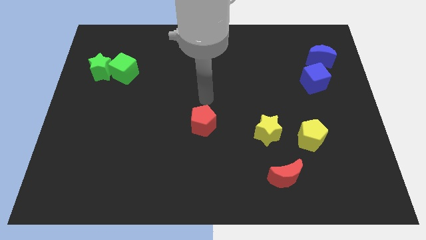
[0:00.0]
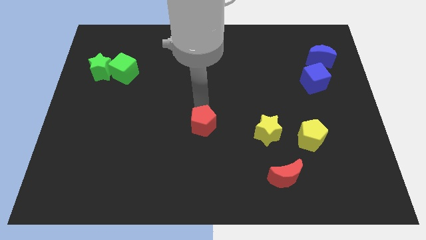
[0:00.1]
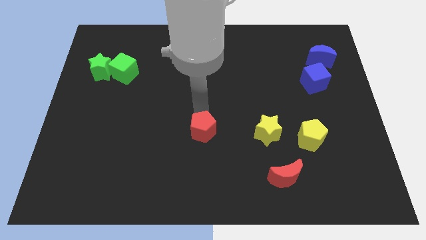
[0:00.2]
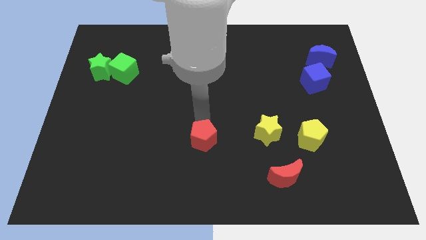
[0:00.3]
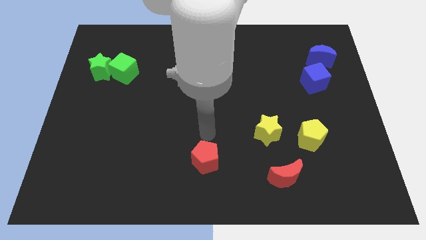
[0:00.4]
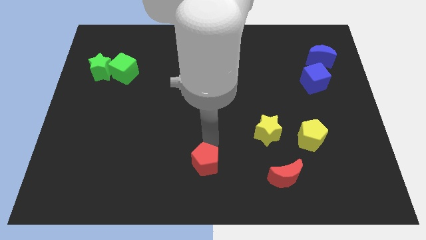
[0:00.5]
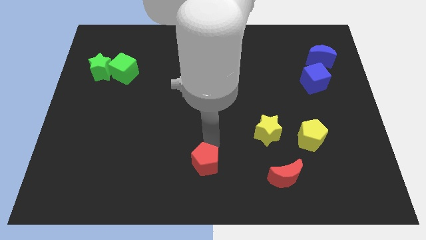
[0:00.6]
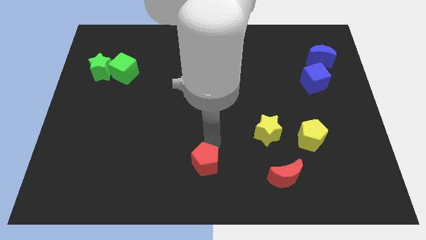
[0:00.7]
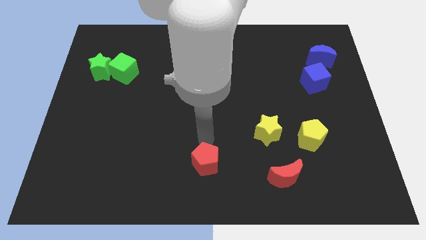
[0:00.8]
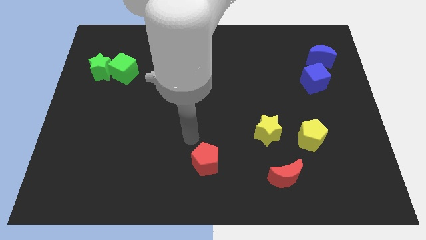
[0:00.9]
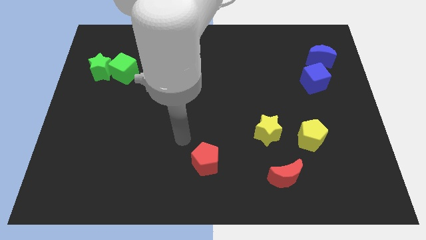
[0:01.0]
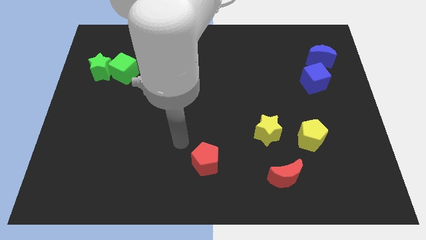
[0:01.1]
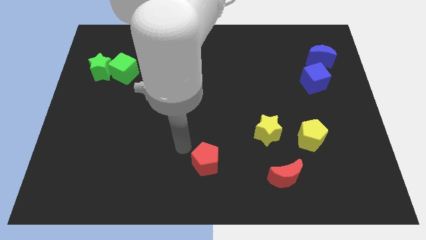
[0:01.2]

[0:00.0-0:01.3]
slide the red pentagon left to the red moon

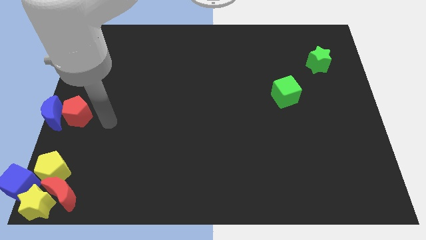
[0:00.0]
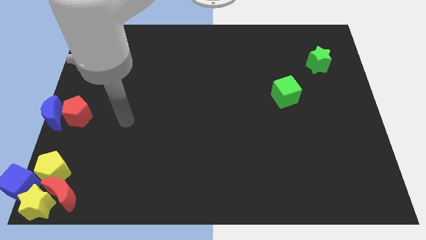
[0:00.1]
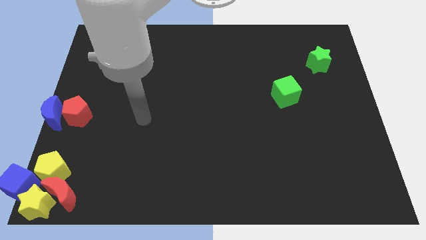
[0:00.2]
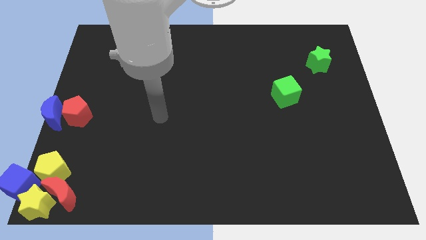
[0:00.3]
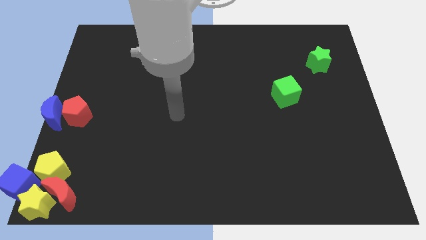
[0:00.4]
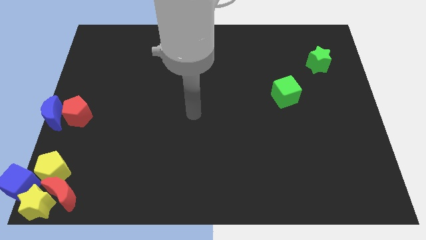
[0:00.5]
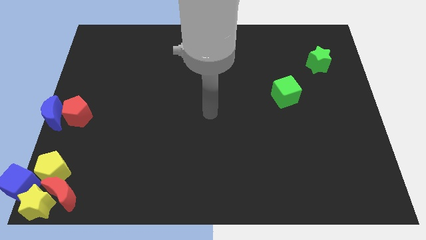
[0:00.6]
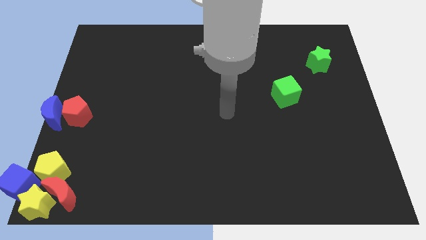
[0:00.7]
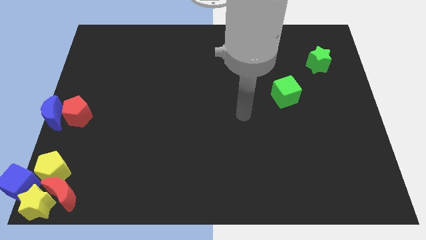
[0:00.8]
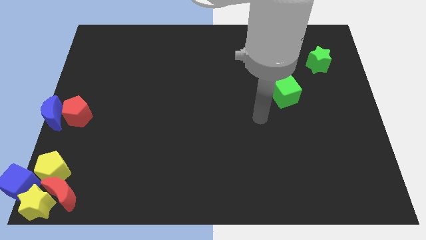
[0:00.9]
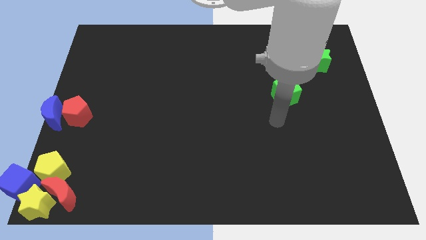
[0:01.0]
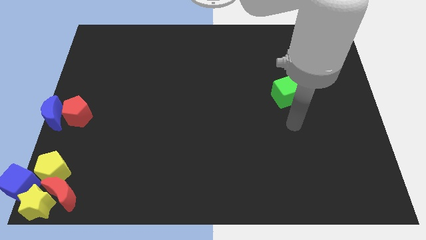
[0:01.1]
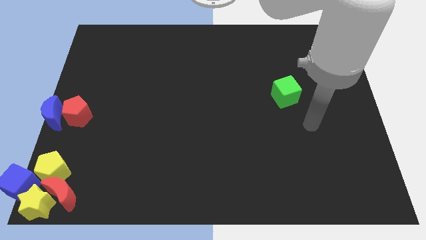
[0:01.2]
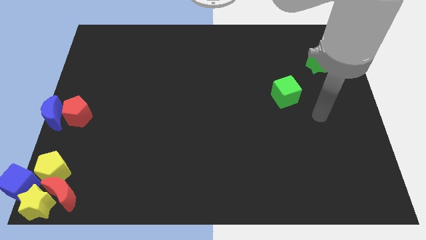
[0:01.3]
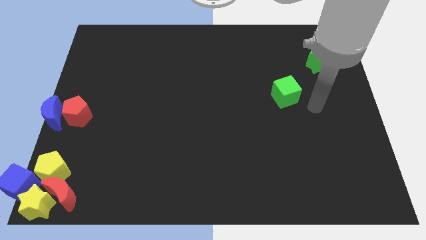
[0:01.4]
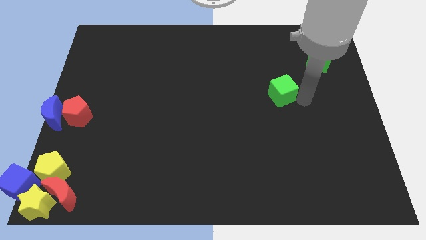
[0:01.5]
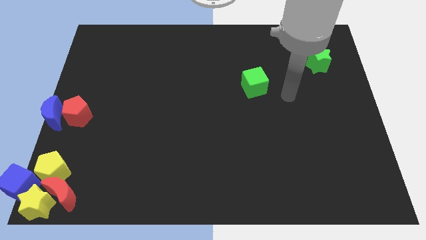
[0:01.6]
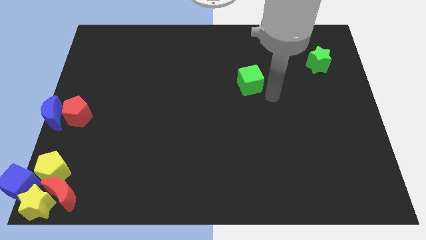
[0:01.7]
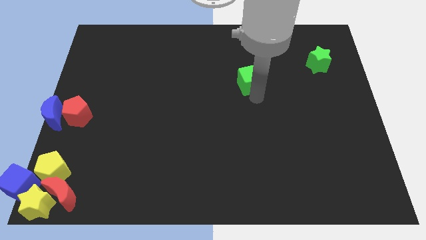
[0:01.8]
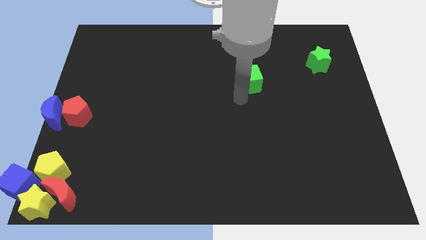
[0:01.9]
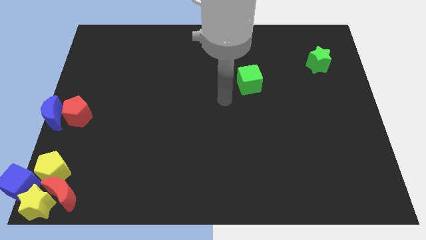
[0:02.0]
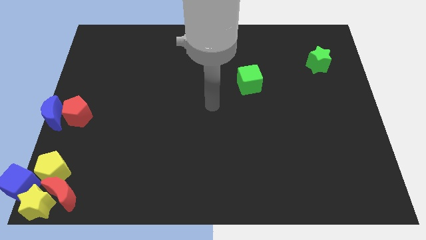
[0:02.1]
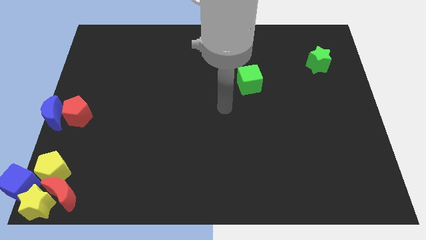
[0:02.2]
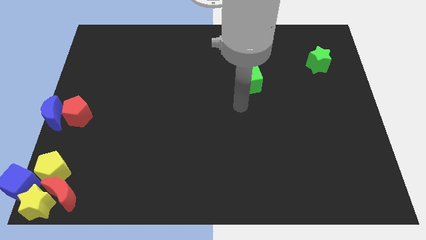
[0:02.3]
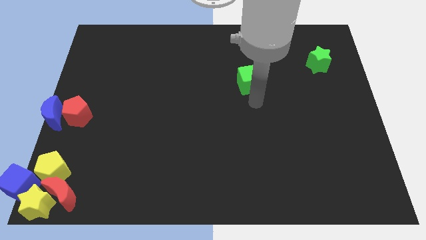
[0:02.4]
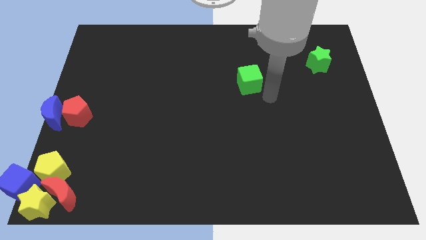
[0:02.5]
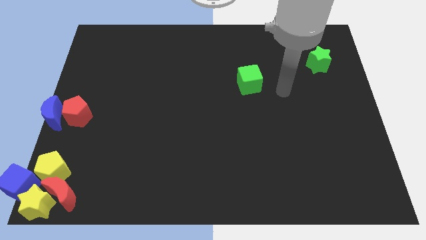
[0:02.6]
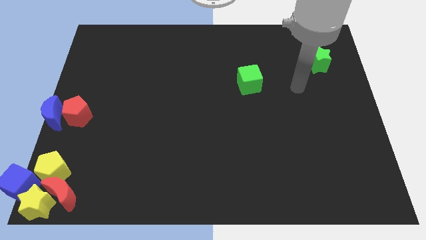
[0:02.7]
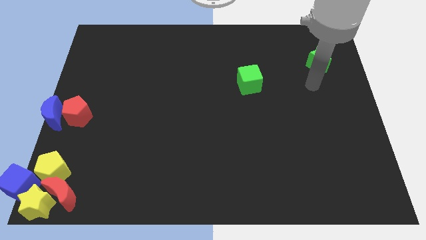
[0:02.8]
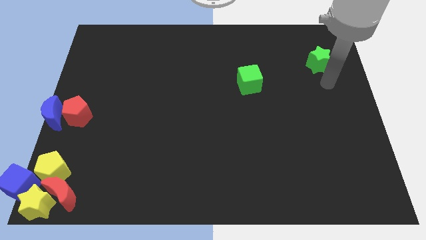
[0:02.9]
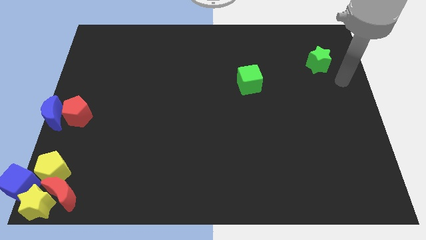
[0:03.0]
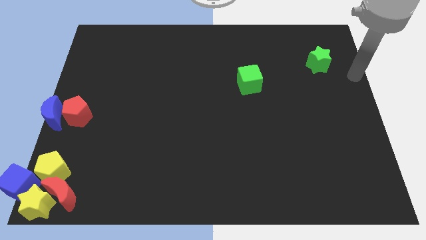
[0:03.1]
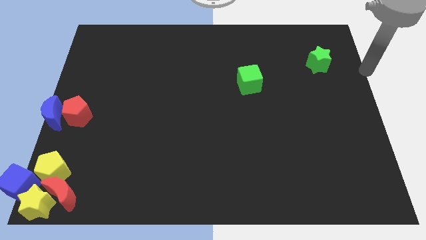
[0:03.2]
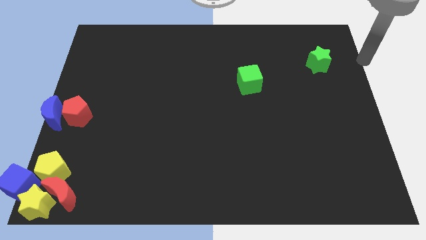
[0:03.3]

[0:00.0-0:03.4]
place green cube towards the top of the board

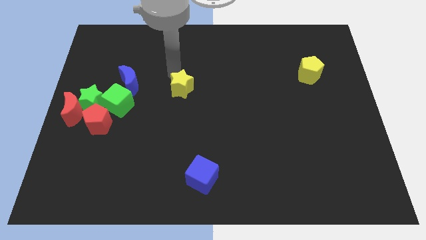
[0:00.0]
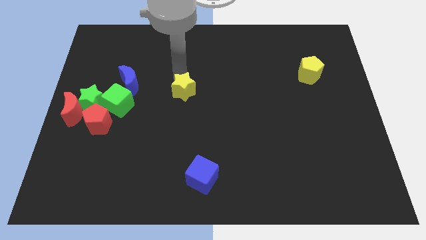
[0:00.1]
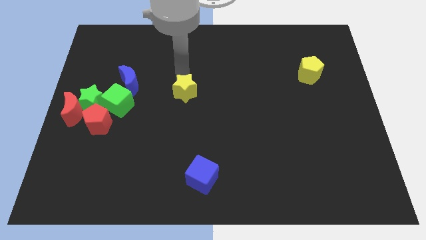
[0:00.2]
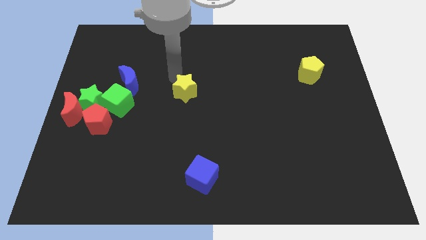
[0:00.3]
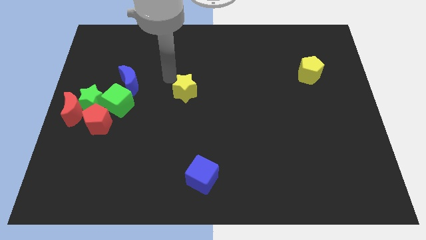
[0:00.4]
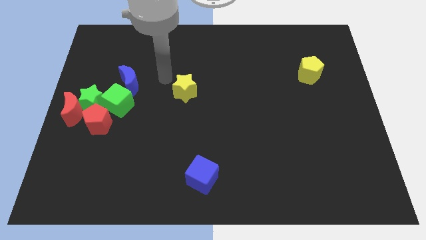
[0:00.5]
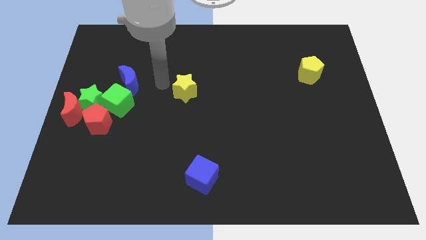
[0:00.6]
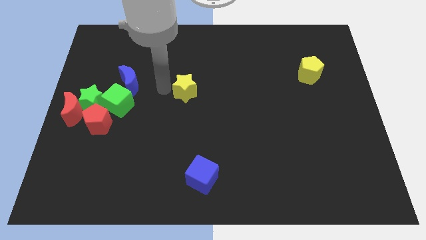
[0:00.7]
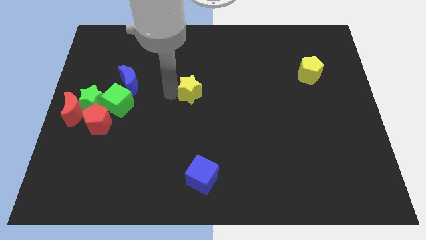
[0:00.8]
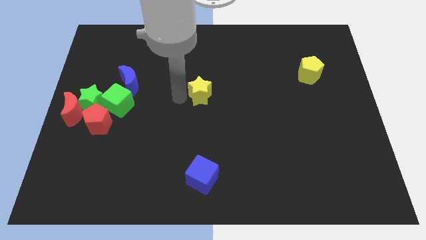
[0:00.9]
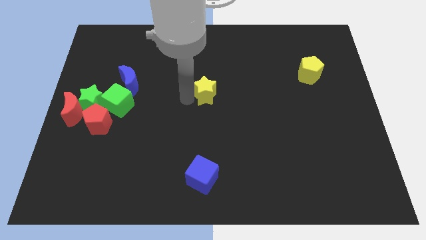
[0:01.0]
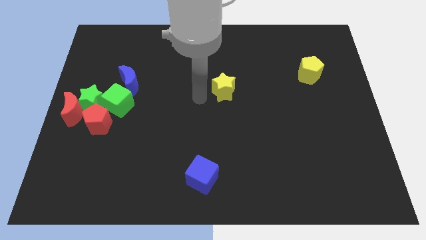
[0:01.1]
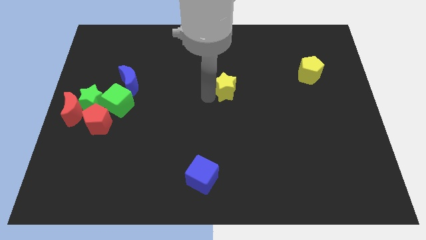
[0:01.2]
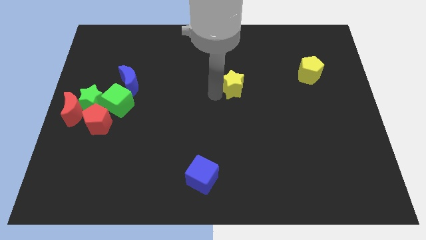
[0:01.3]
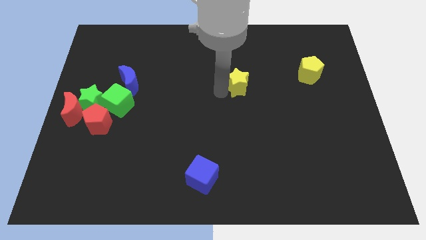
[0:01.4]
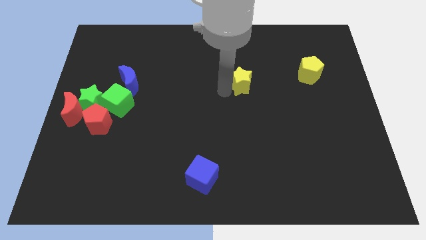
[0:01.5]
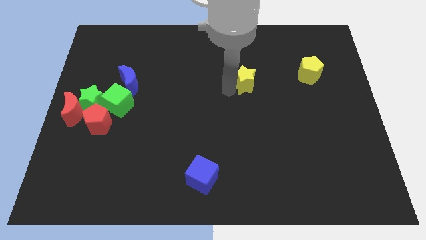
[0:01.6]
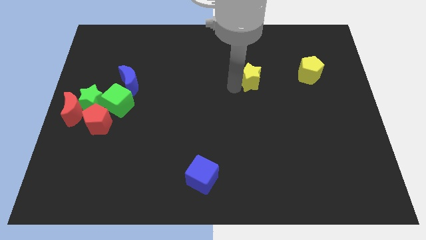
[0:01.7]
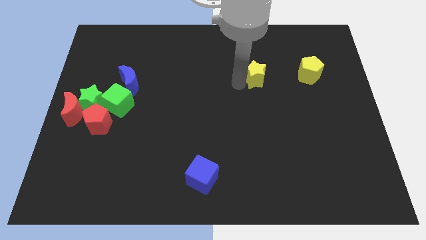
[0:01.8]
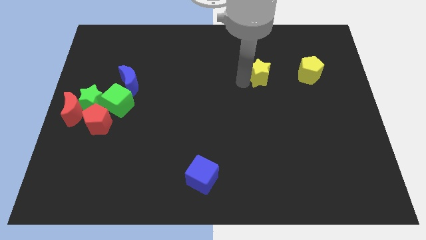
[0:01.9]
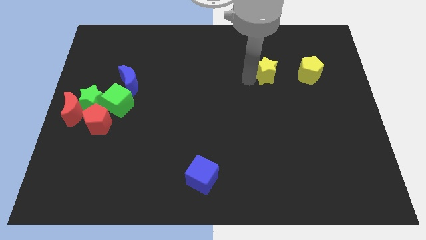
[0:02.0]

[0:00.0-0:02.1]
slide yellow star to the left of yellow pentagon

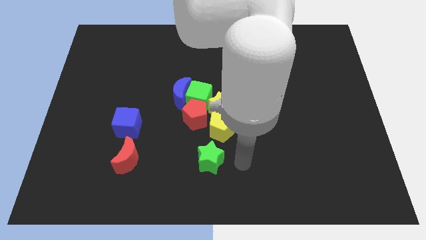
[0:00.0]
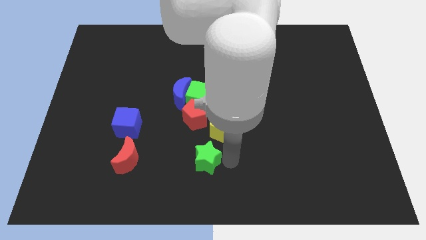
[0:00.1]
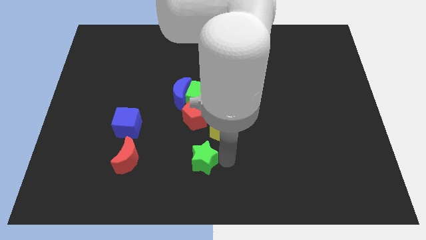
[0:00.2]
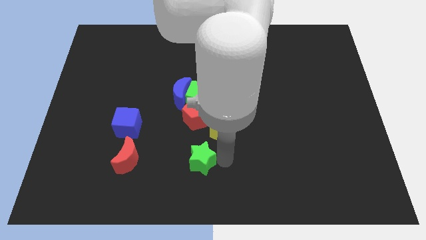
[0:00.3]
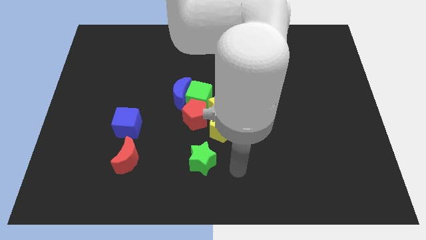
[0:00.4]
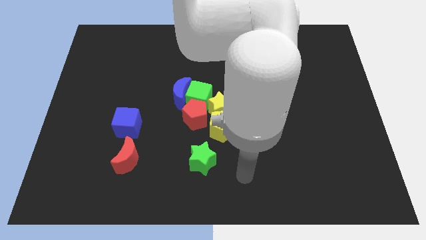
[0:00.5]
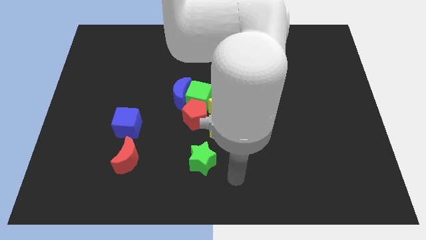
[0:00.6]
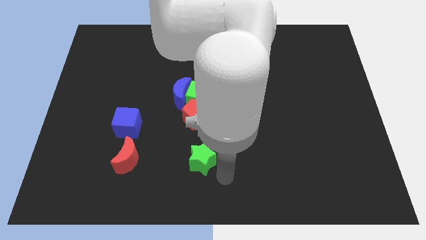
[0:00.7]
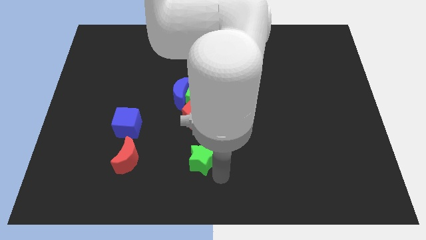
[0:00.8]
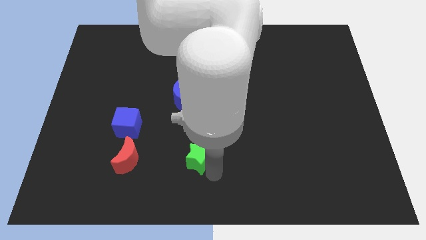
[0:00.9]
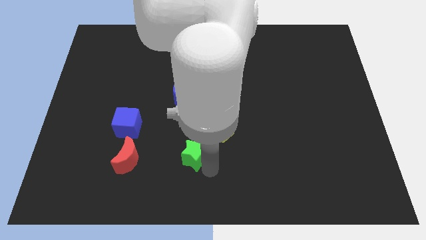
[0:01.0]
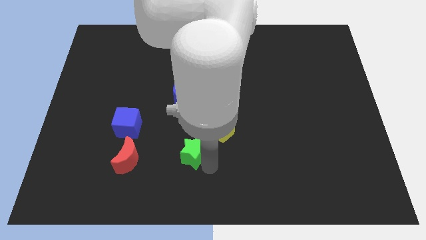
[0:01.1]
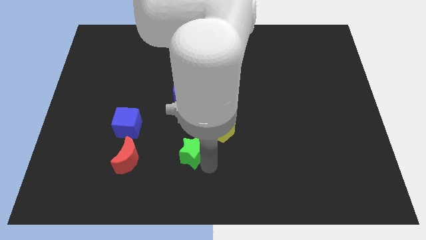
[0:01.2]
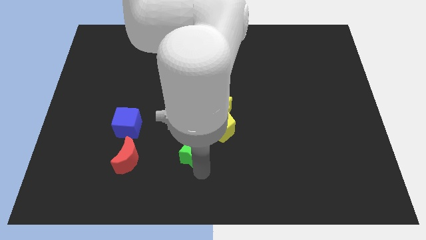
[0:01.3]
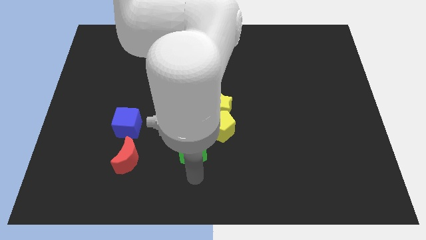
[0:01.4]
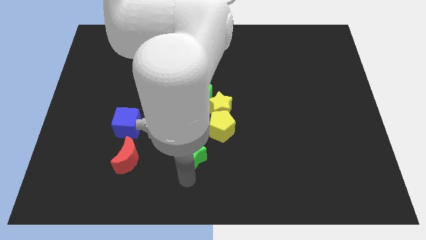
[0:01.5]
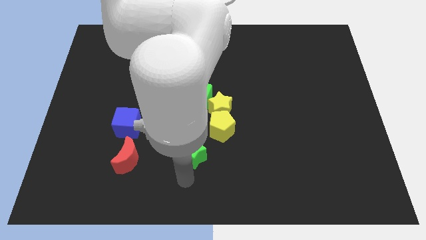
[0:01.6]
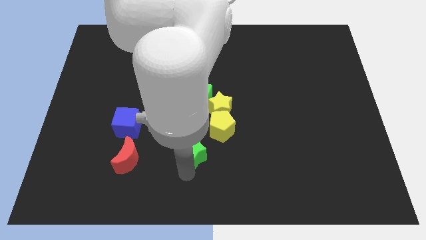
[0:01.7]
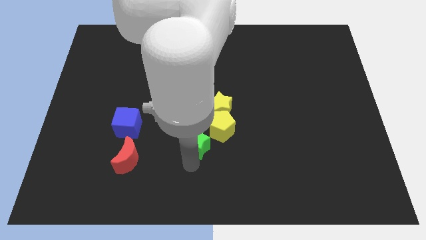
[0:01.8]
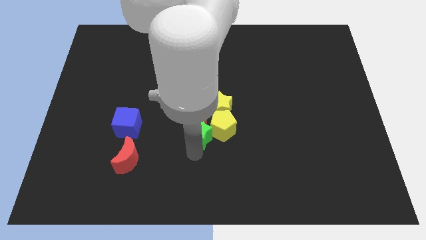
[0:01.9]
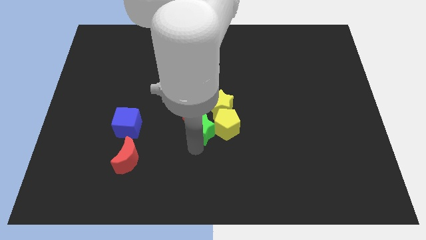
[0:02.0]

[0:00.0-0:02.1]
place the green star at the bottom left side of the pentagon
